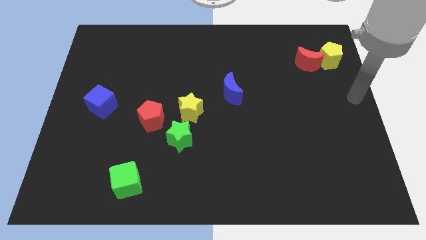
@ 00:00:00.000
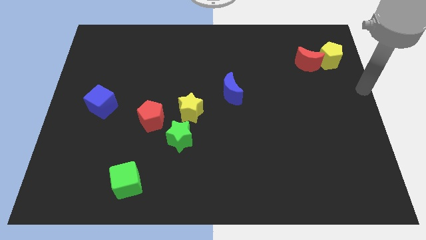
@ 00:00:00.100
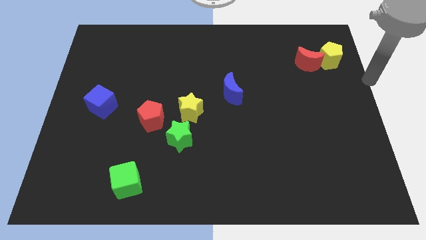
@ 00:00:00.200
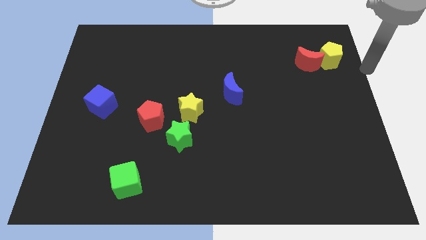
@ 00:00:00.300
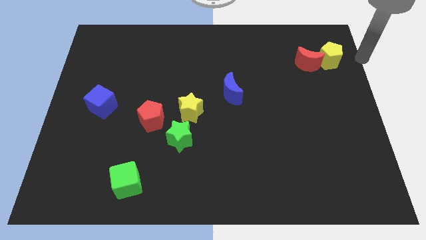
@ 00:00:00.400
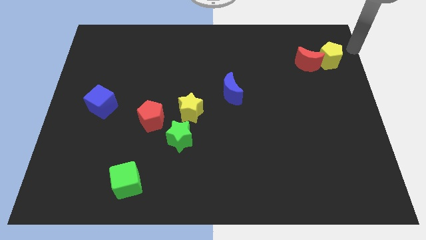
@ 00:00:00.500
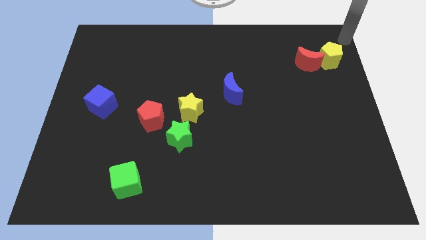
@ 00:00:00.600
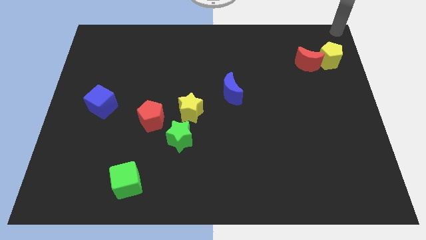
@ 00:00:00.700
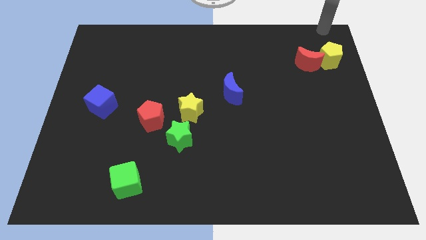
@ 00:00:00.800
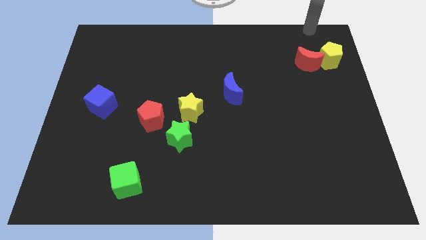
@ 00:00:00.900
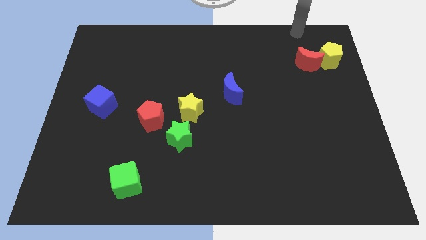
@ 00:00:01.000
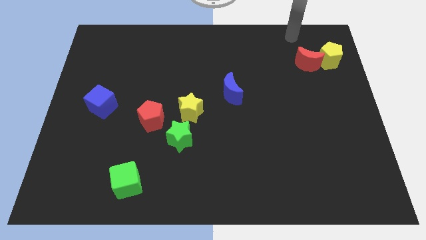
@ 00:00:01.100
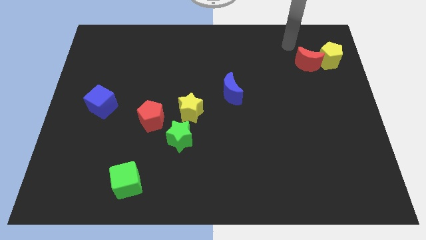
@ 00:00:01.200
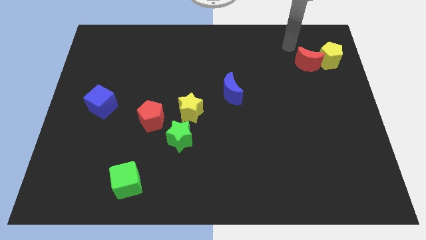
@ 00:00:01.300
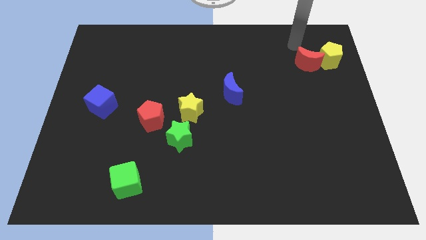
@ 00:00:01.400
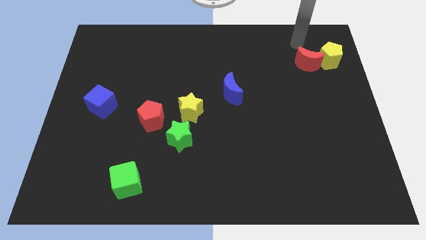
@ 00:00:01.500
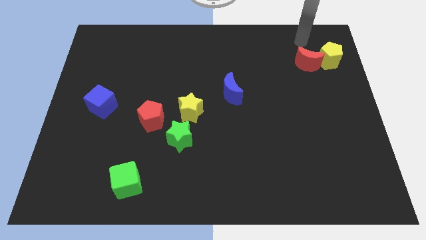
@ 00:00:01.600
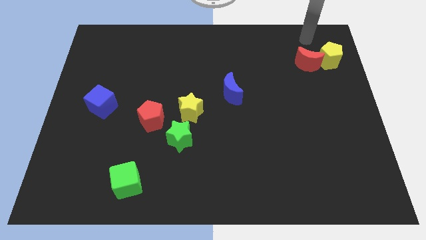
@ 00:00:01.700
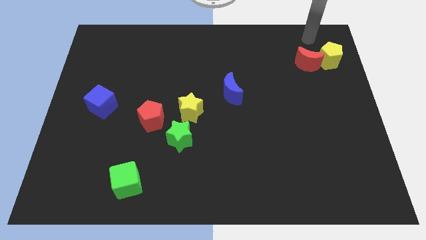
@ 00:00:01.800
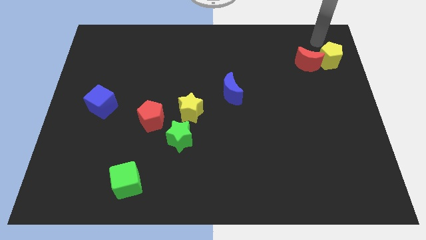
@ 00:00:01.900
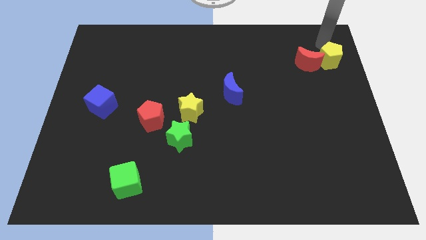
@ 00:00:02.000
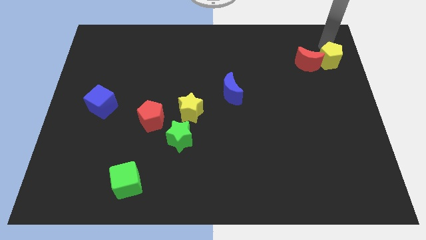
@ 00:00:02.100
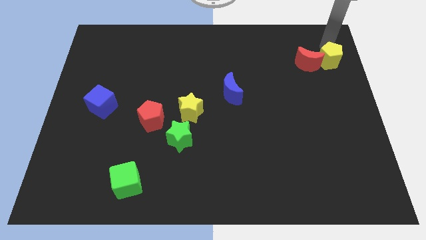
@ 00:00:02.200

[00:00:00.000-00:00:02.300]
move your arm and point on top of yellow pentagon

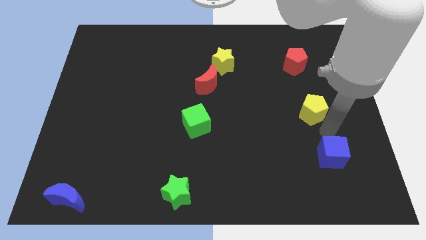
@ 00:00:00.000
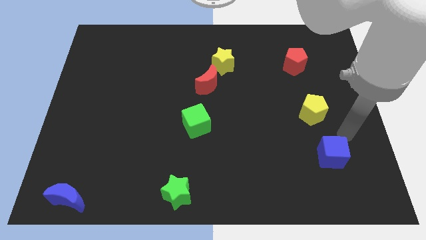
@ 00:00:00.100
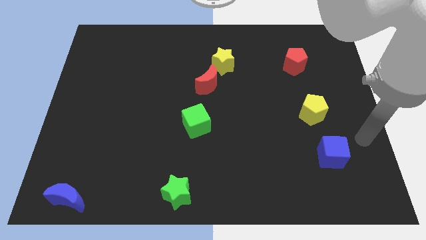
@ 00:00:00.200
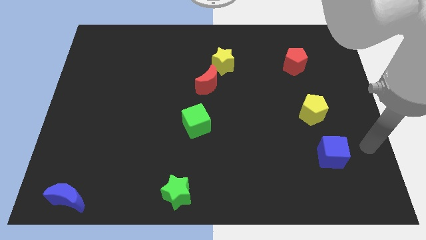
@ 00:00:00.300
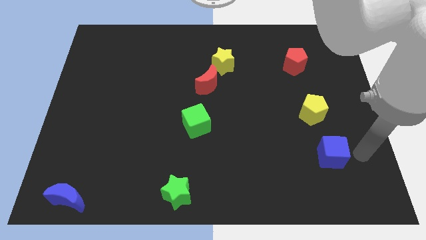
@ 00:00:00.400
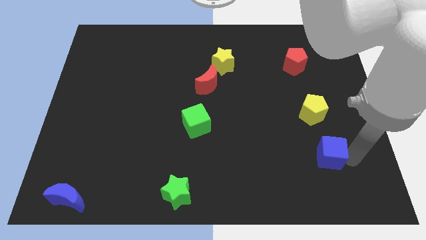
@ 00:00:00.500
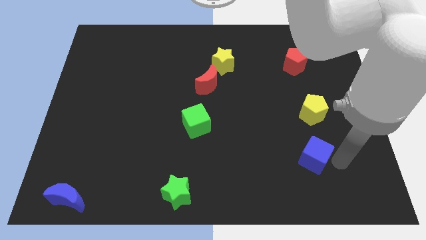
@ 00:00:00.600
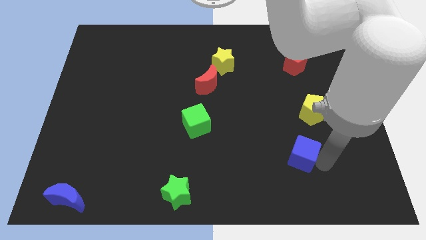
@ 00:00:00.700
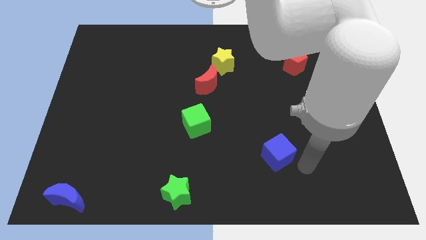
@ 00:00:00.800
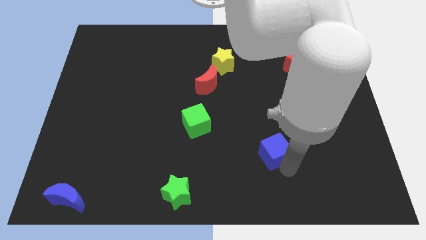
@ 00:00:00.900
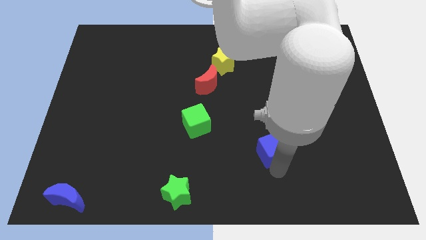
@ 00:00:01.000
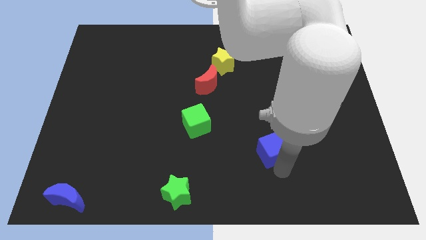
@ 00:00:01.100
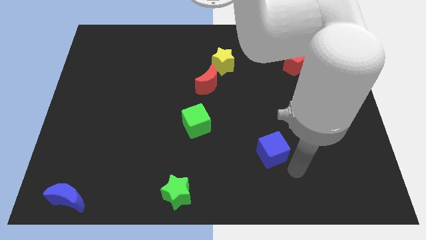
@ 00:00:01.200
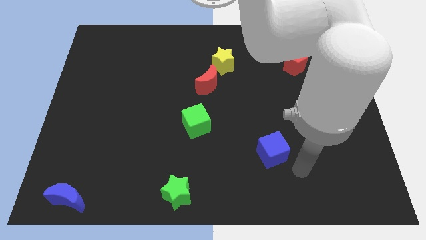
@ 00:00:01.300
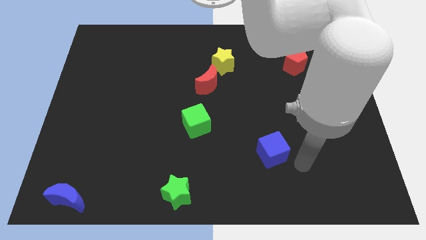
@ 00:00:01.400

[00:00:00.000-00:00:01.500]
push the blue cube slightly to the left

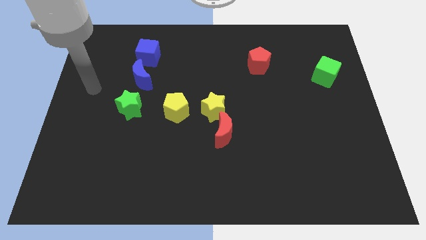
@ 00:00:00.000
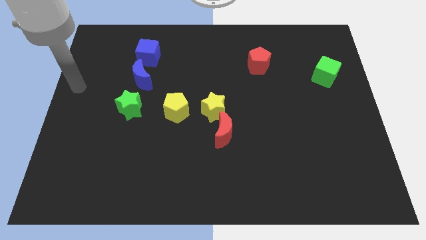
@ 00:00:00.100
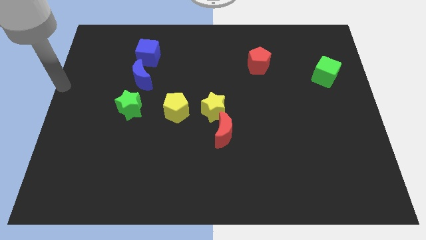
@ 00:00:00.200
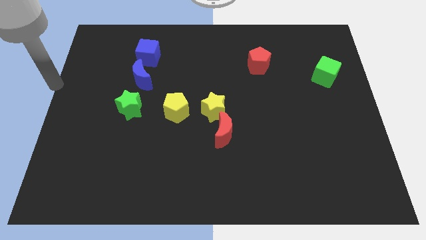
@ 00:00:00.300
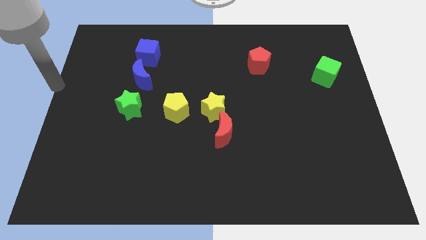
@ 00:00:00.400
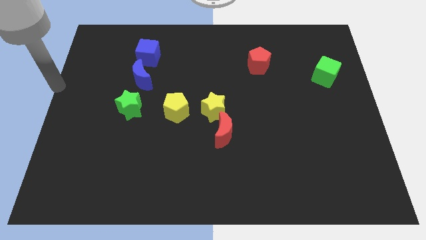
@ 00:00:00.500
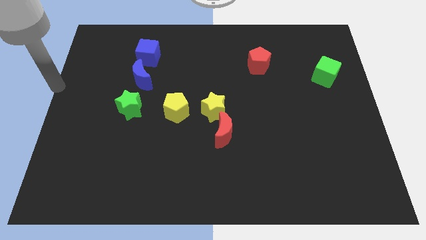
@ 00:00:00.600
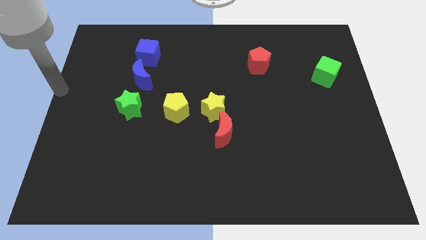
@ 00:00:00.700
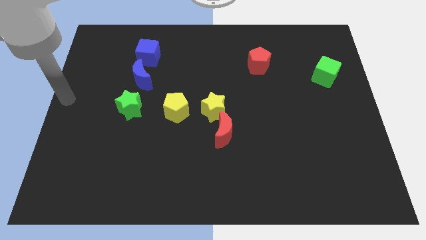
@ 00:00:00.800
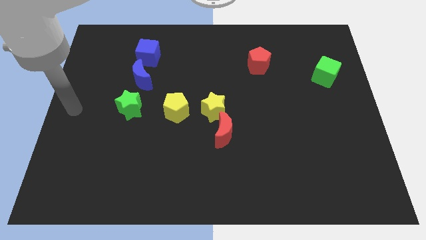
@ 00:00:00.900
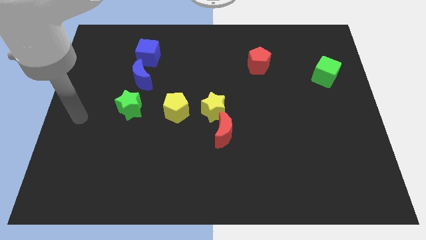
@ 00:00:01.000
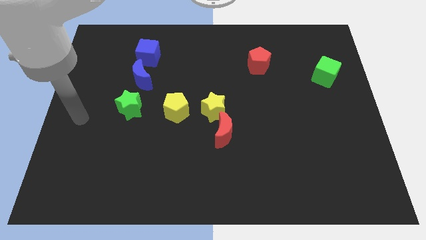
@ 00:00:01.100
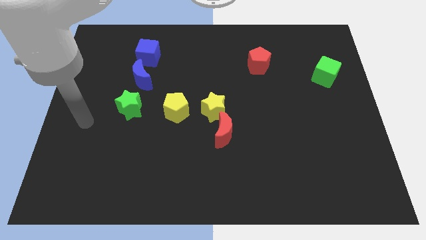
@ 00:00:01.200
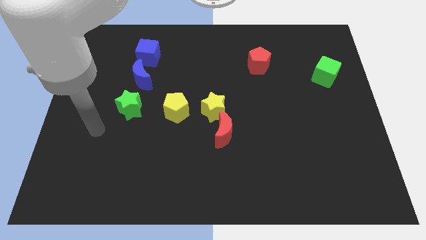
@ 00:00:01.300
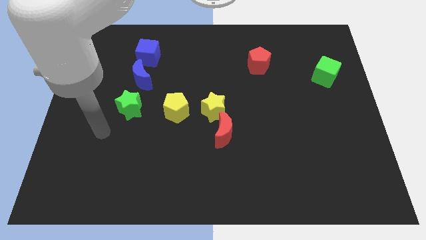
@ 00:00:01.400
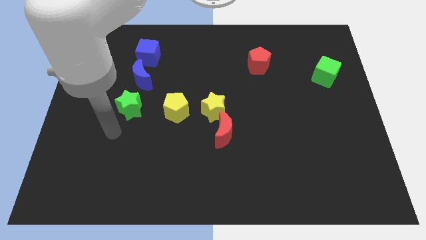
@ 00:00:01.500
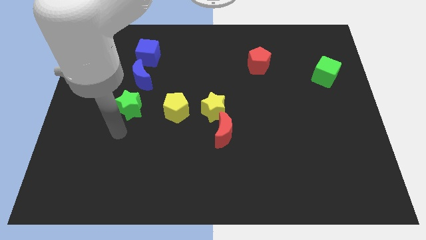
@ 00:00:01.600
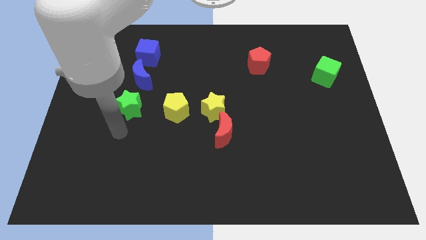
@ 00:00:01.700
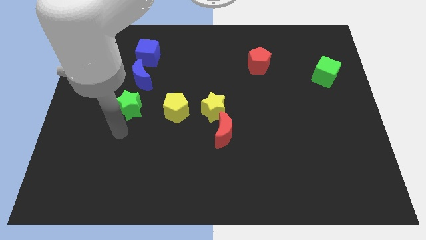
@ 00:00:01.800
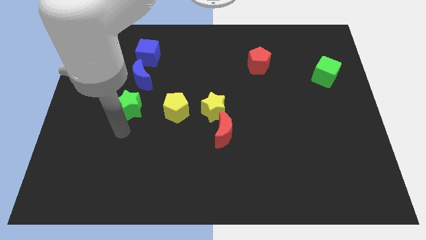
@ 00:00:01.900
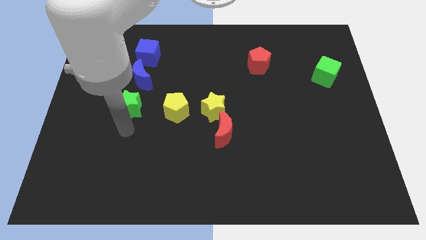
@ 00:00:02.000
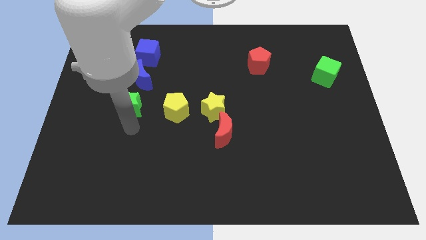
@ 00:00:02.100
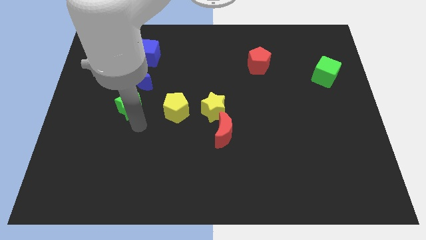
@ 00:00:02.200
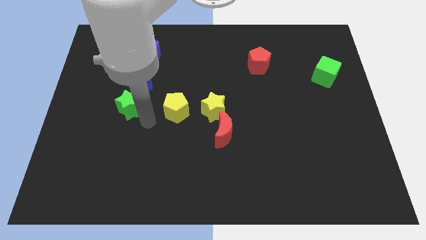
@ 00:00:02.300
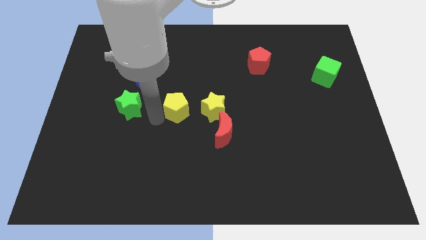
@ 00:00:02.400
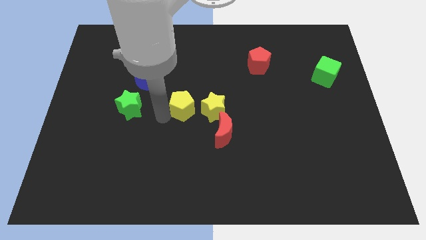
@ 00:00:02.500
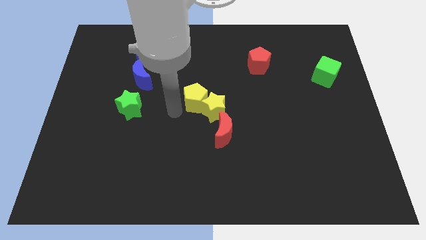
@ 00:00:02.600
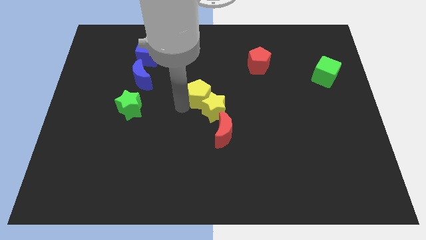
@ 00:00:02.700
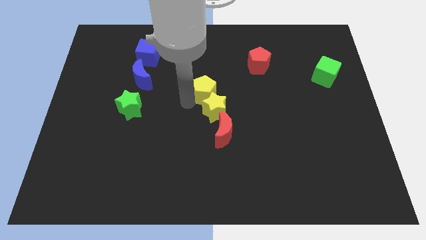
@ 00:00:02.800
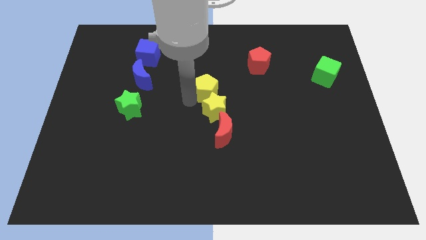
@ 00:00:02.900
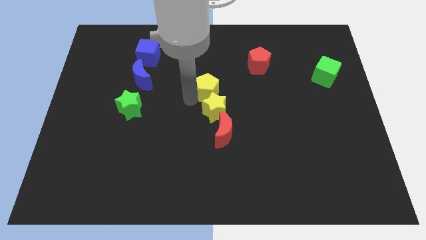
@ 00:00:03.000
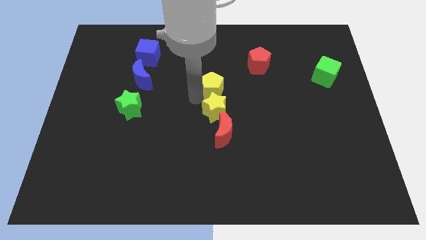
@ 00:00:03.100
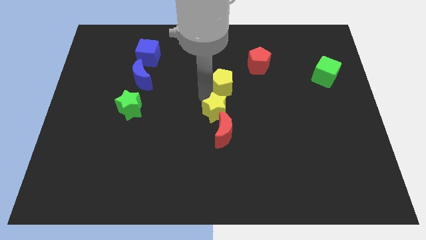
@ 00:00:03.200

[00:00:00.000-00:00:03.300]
move the yellow pentagon diagonally on the top right side of the green star

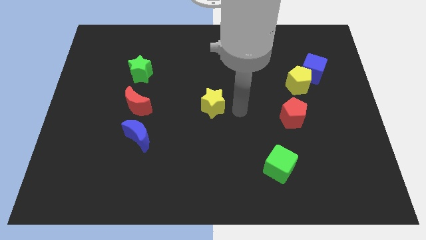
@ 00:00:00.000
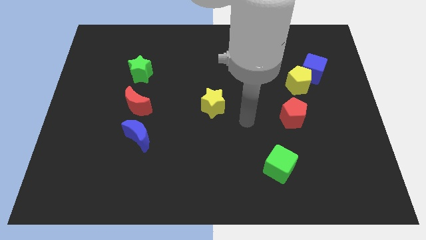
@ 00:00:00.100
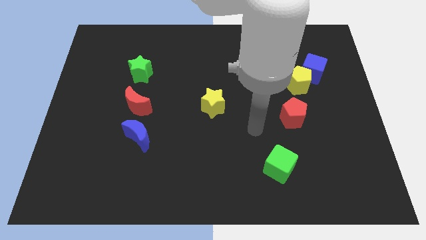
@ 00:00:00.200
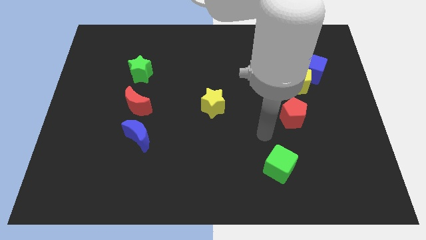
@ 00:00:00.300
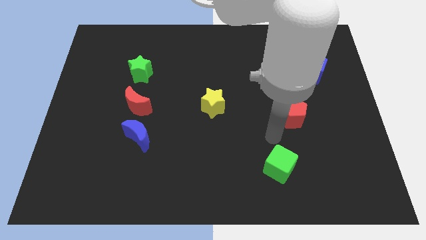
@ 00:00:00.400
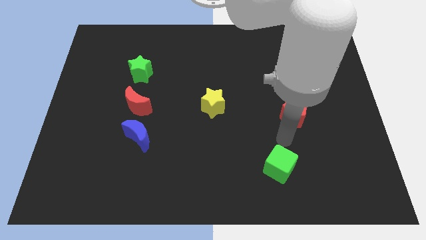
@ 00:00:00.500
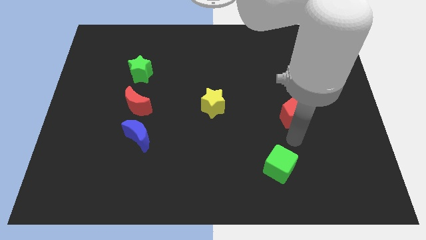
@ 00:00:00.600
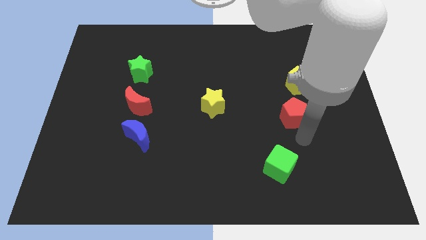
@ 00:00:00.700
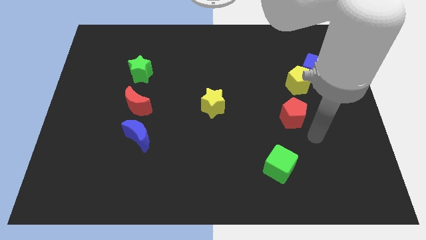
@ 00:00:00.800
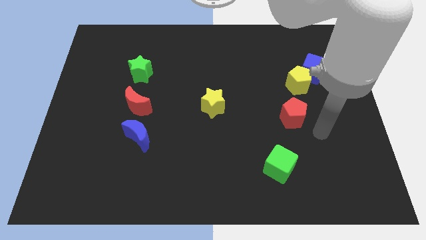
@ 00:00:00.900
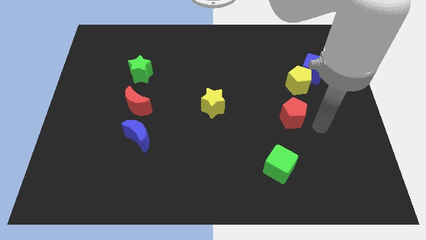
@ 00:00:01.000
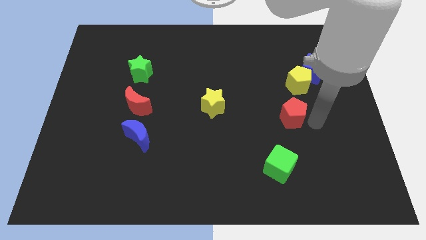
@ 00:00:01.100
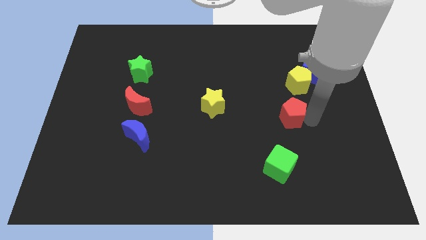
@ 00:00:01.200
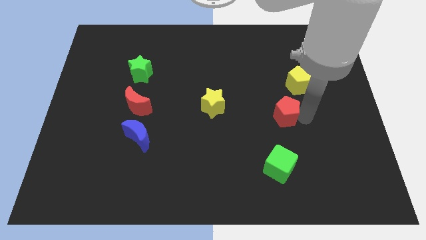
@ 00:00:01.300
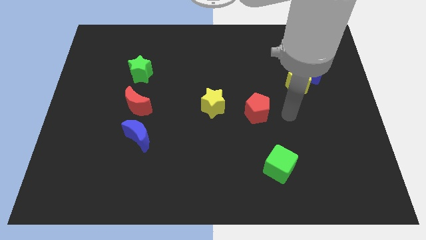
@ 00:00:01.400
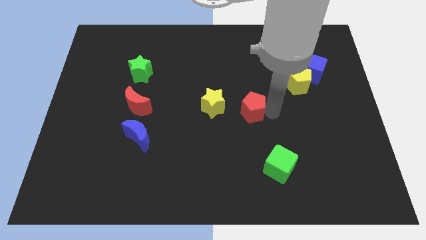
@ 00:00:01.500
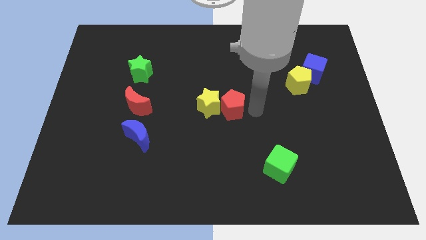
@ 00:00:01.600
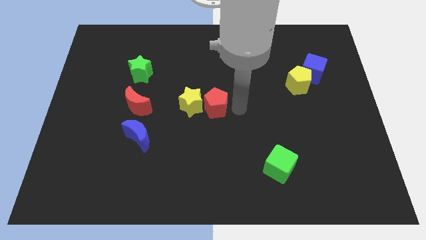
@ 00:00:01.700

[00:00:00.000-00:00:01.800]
push the red pentagon into yellow star
